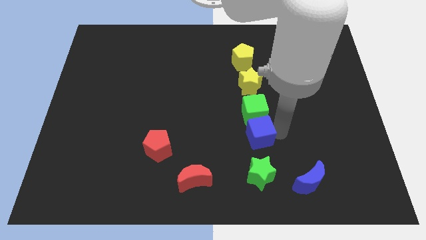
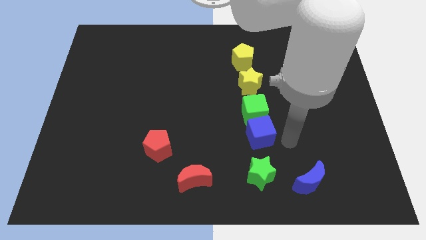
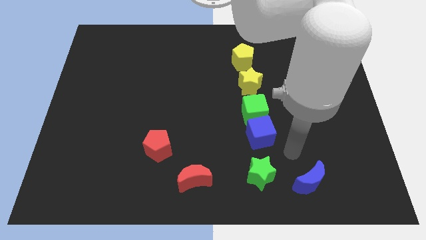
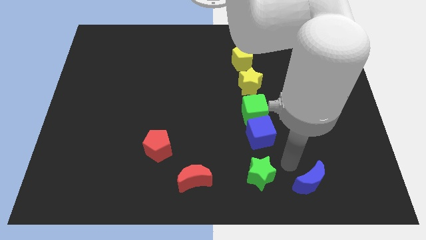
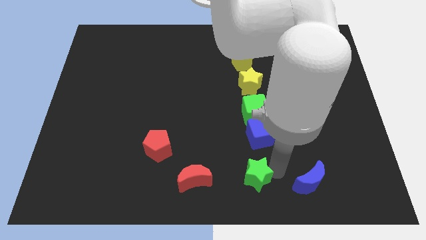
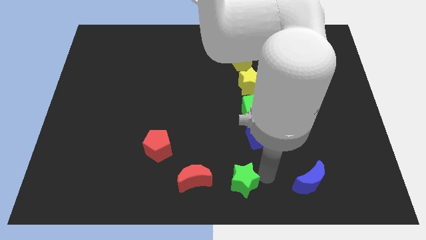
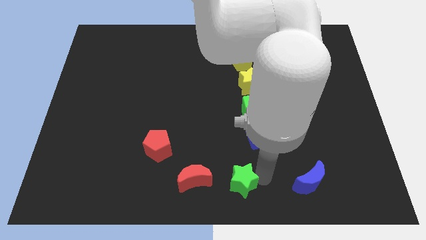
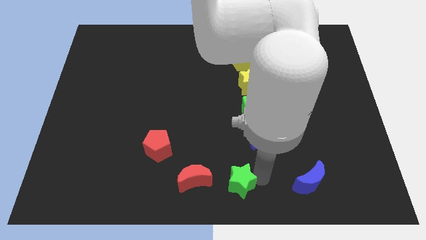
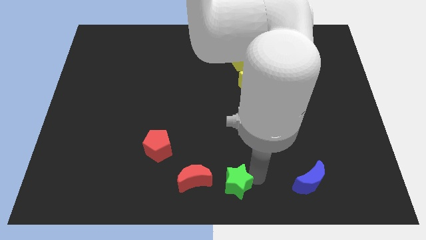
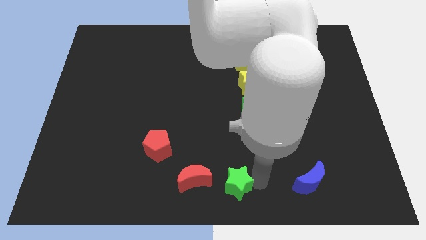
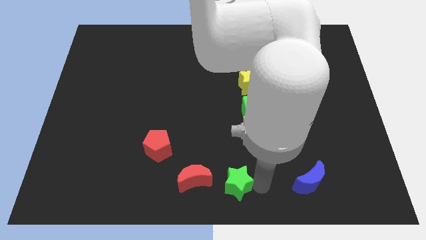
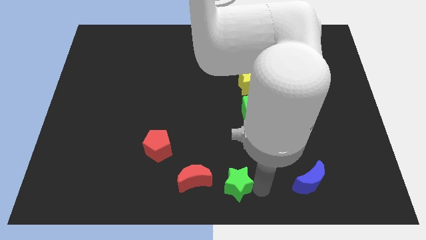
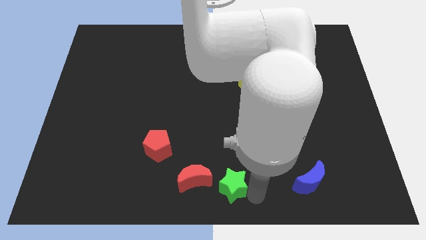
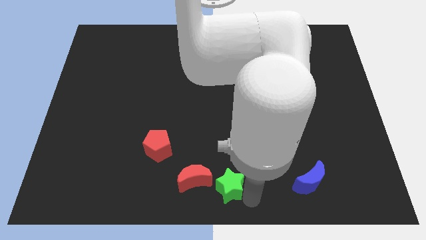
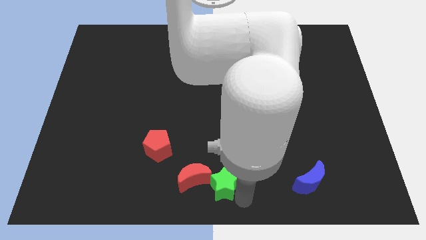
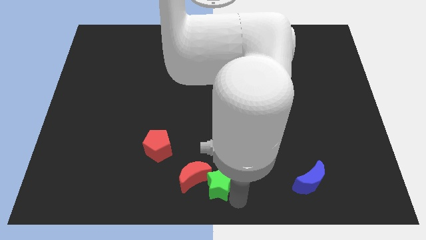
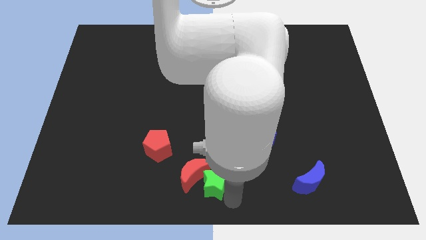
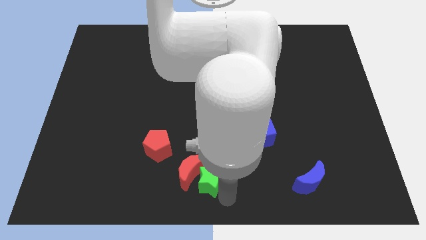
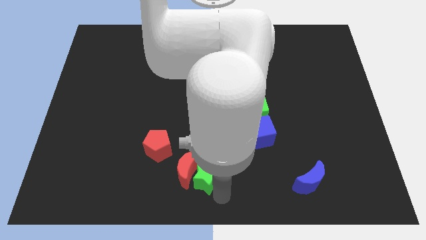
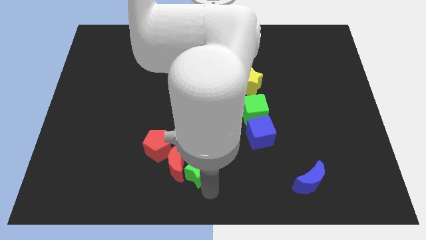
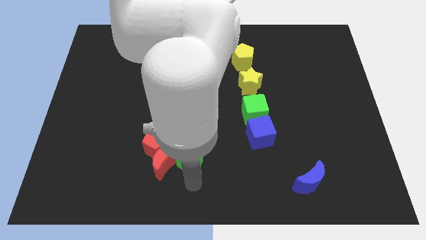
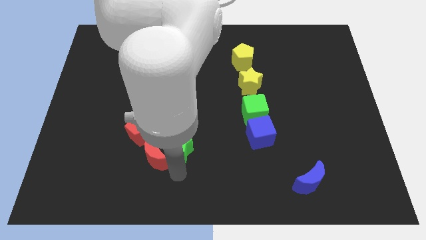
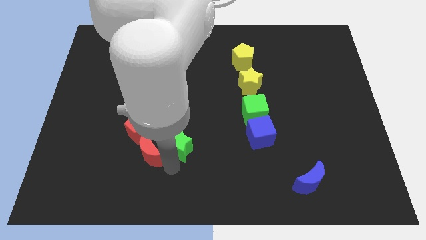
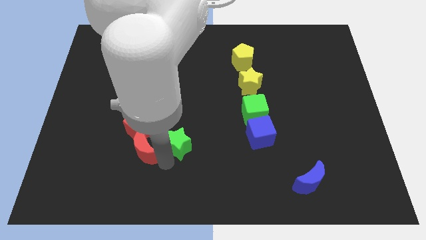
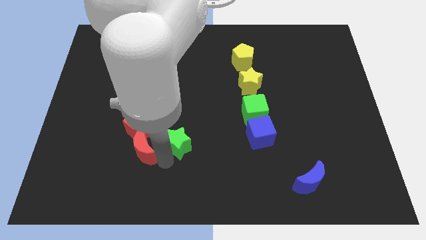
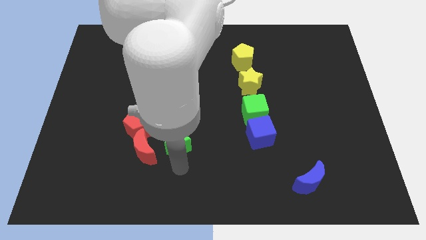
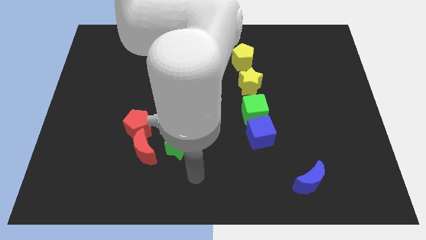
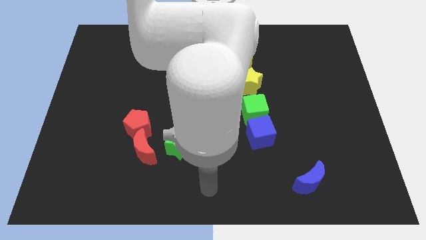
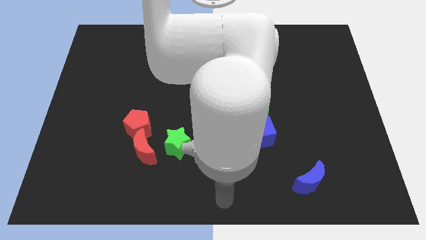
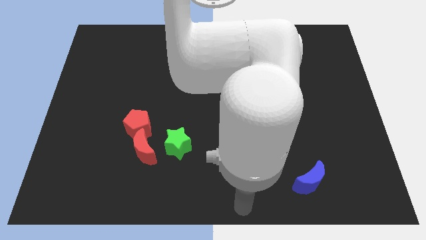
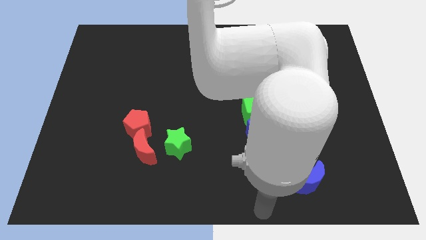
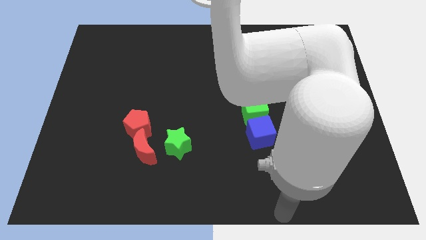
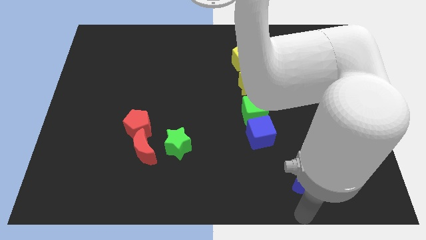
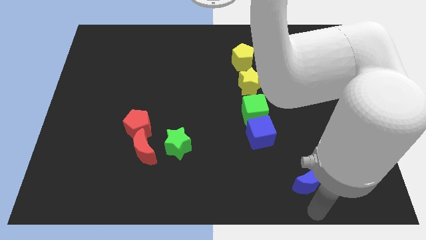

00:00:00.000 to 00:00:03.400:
push the green star and red moon close to the red pentagon

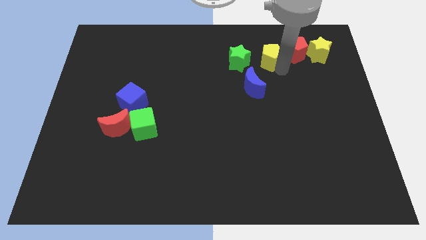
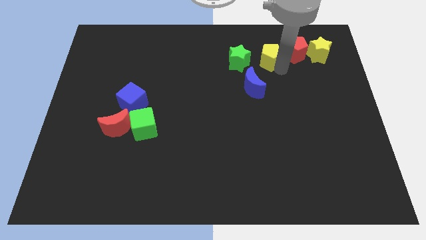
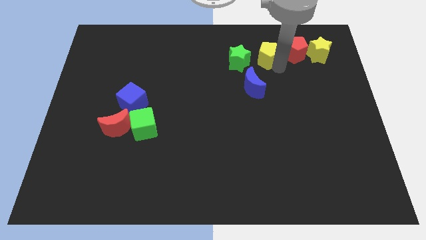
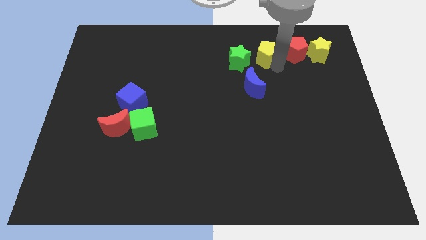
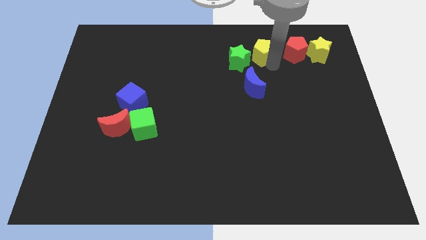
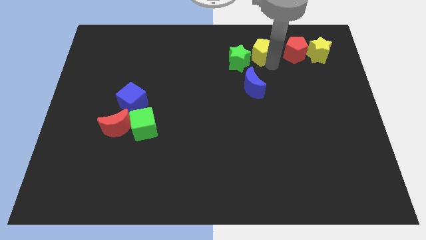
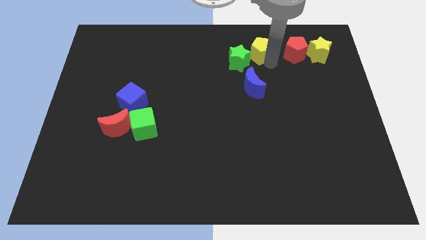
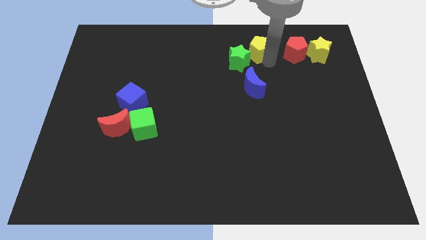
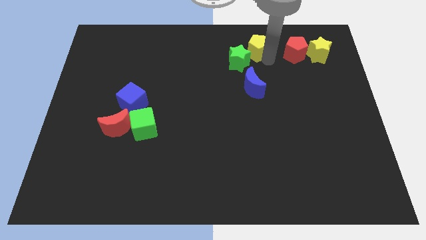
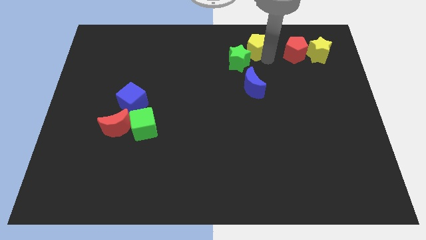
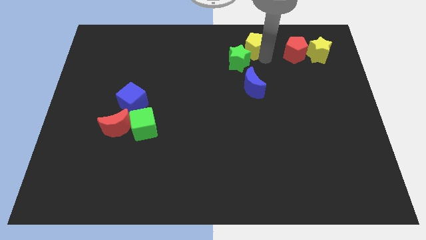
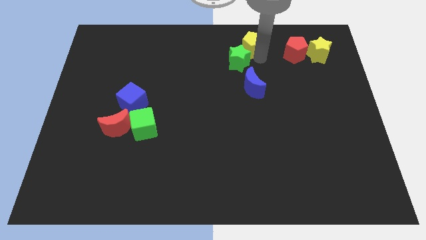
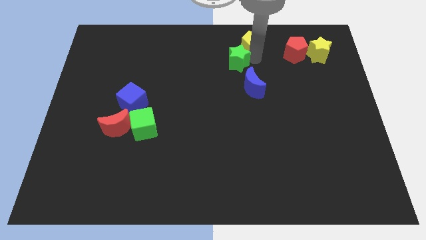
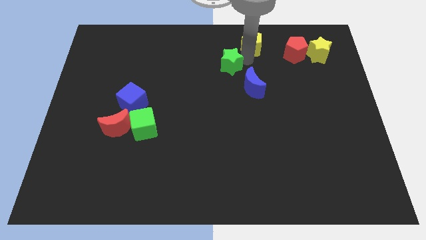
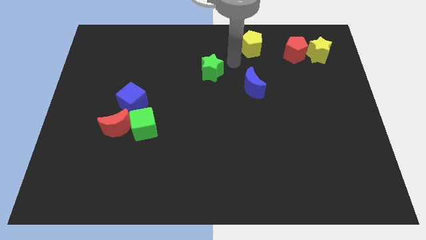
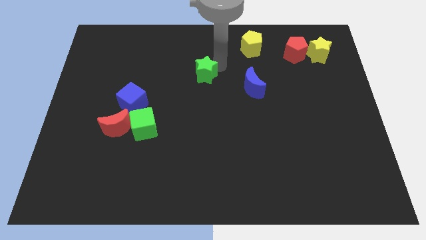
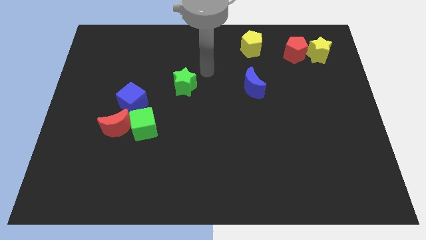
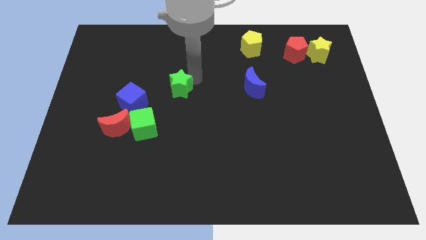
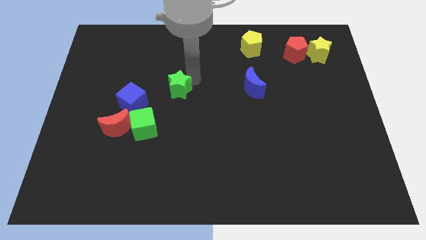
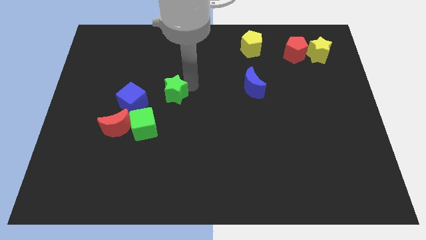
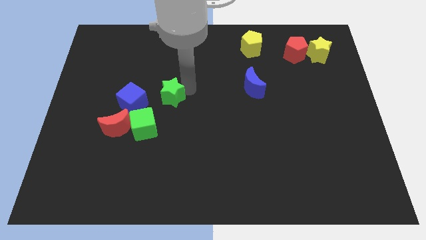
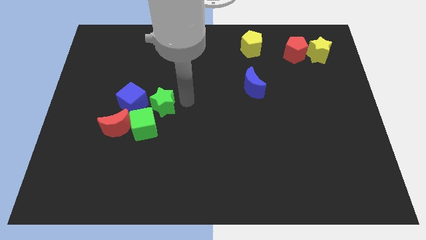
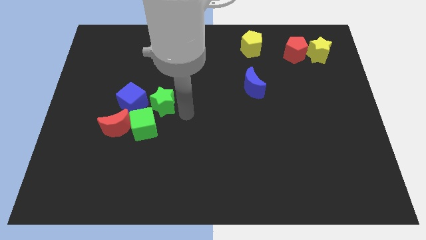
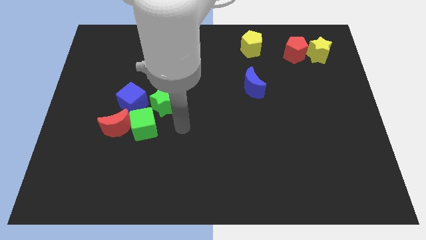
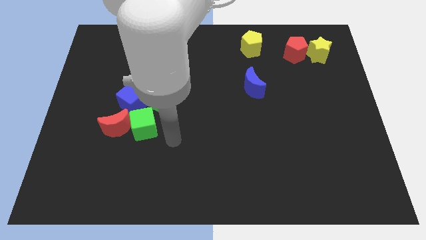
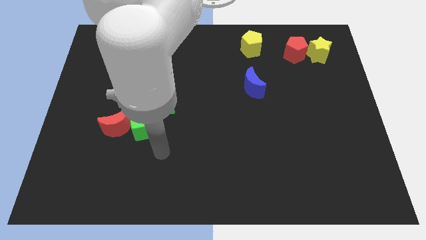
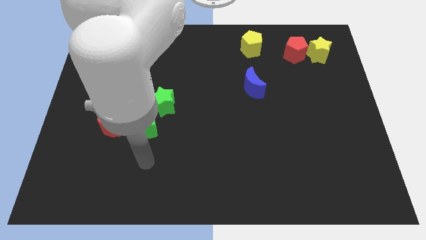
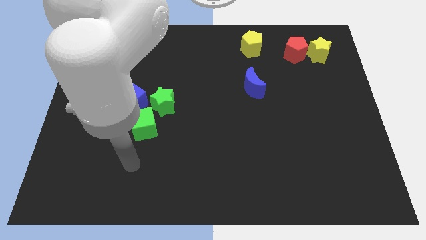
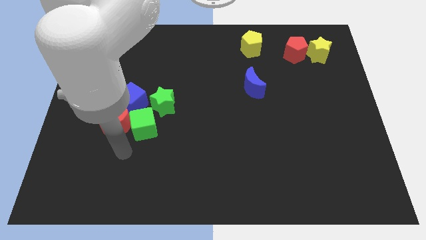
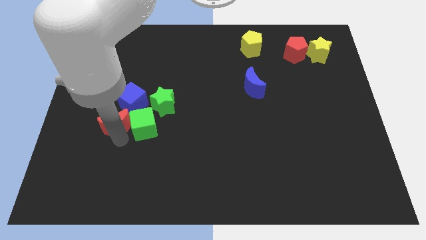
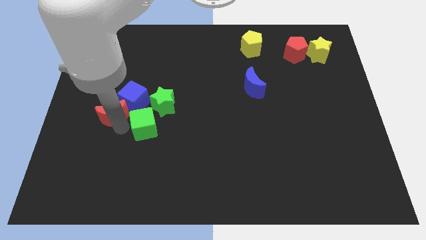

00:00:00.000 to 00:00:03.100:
separate the green star from the yellow pentagon

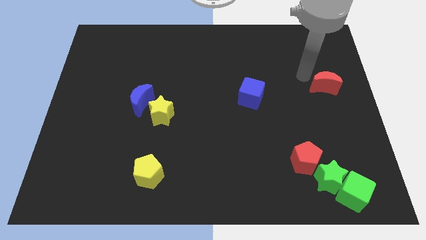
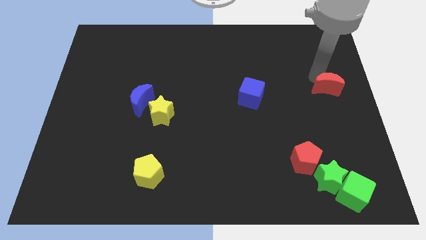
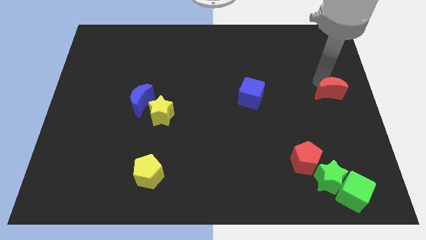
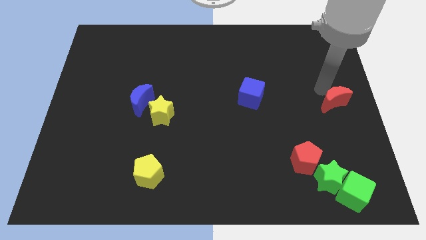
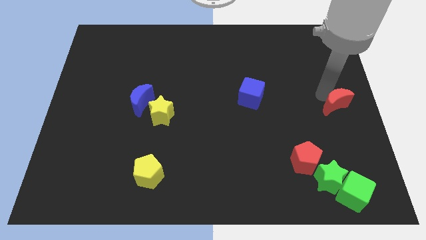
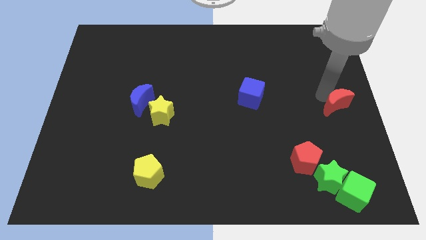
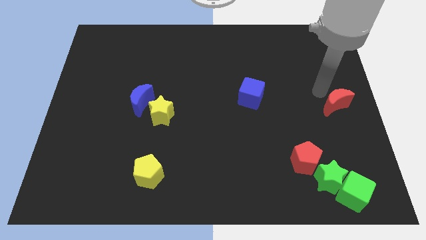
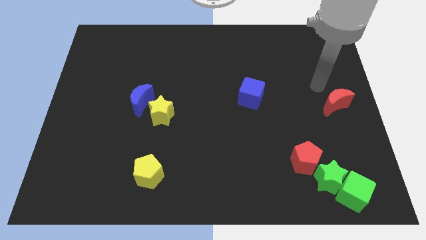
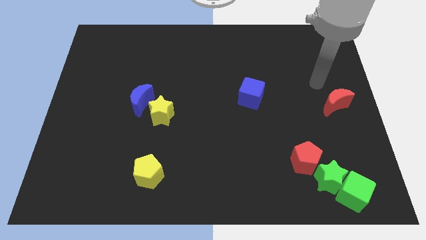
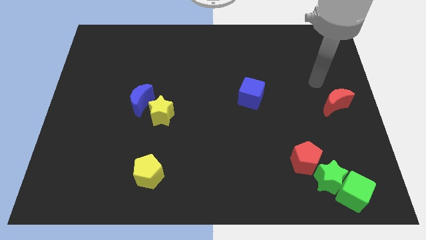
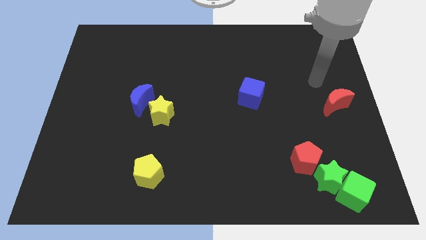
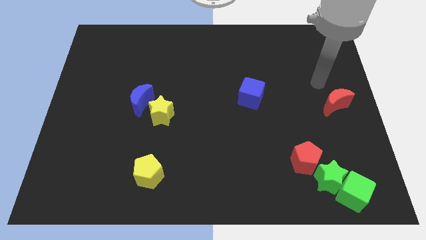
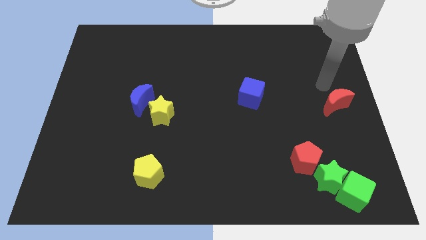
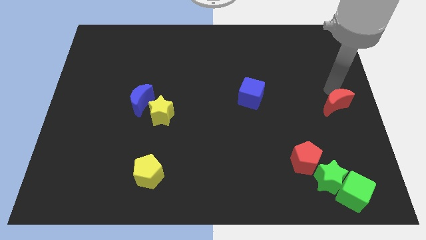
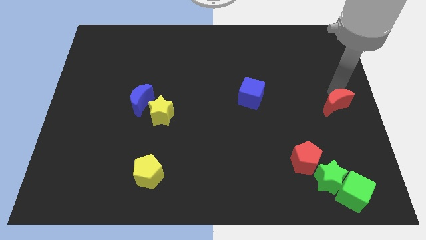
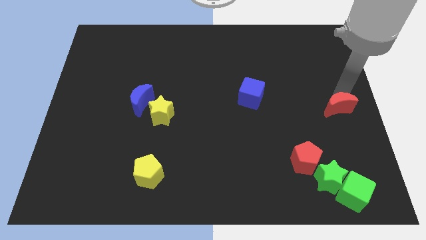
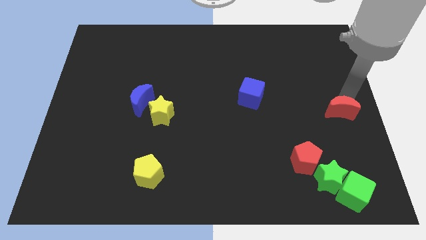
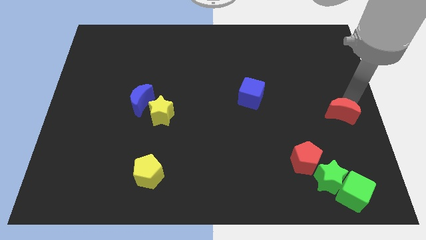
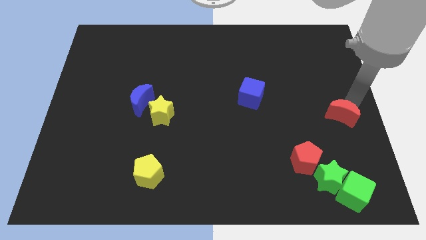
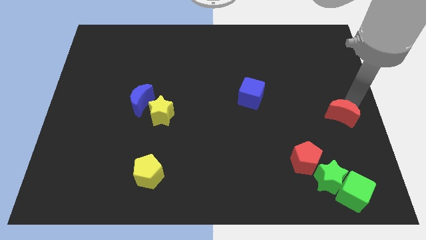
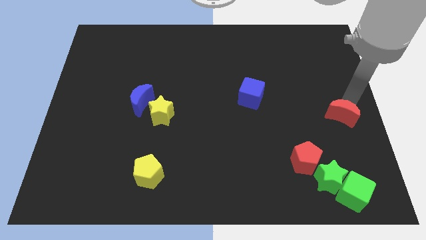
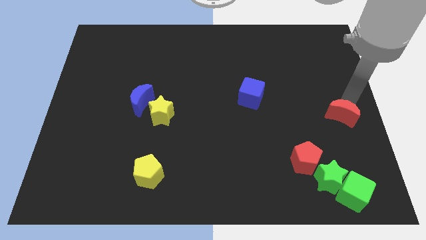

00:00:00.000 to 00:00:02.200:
push the red moon diagonally to the red pentagon

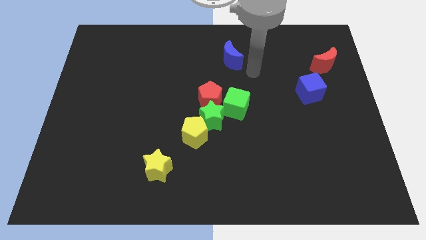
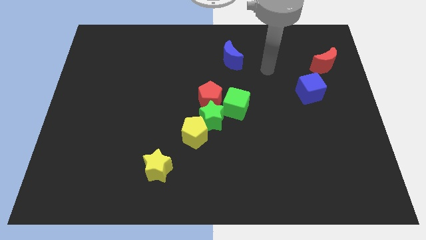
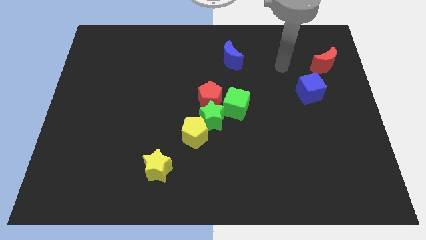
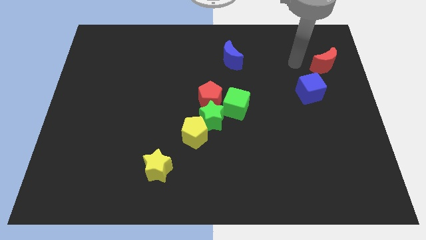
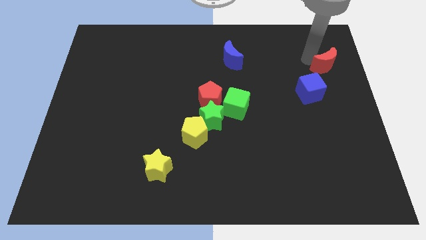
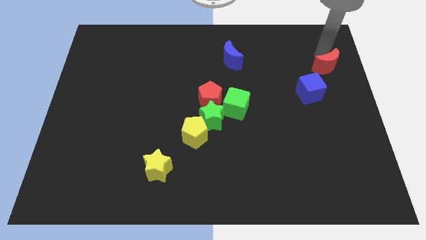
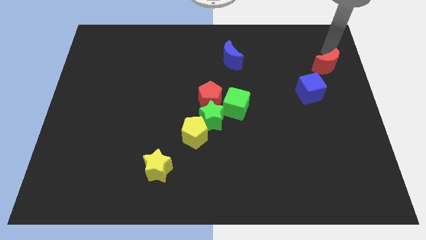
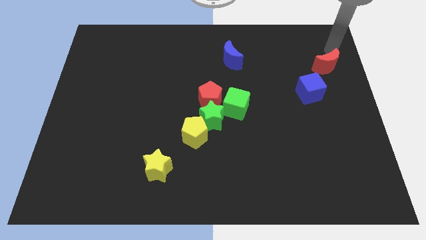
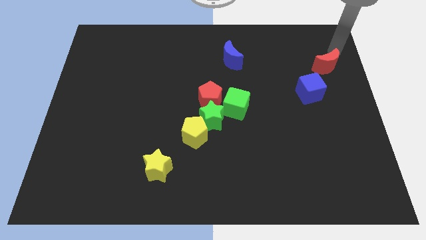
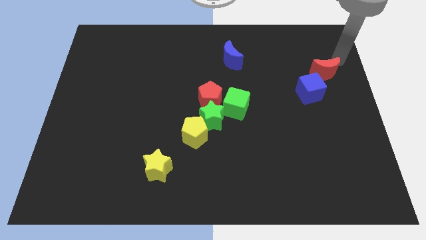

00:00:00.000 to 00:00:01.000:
place arm on the top of red moon
